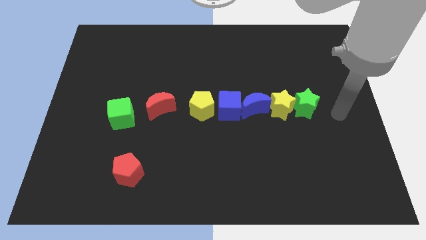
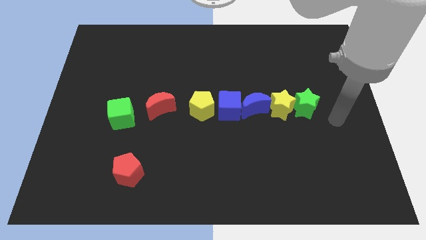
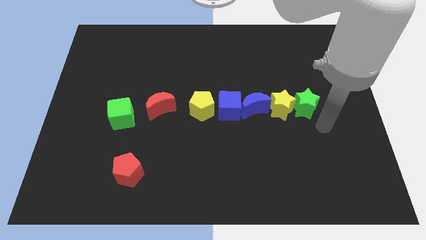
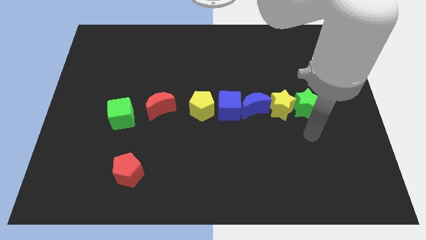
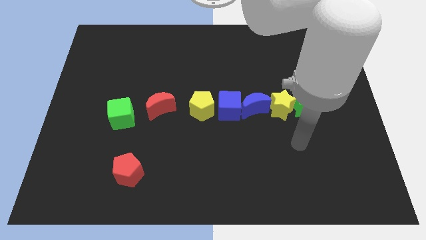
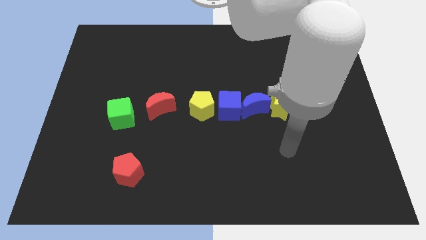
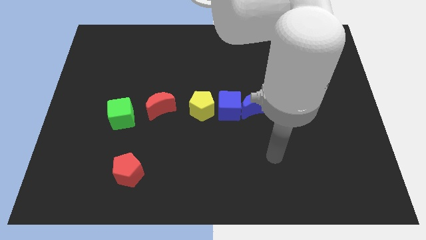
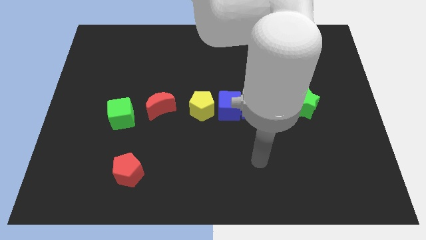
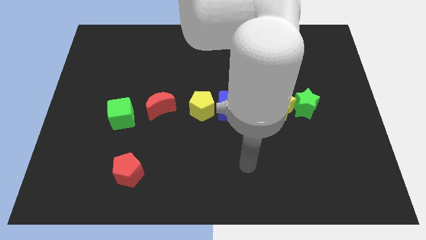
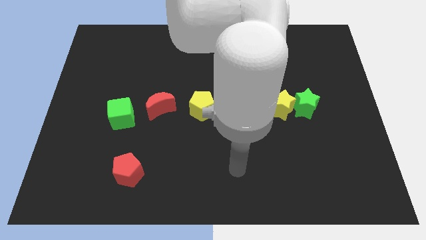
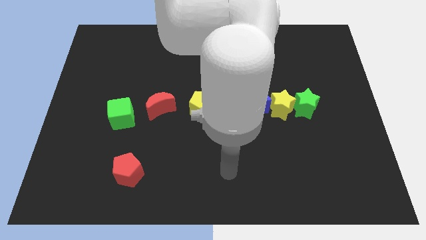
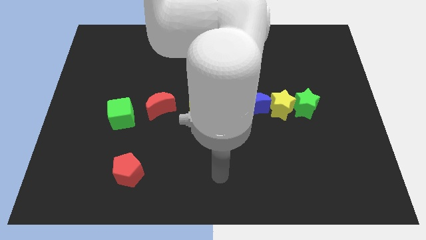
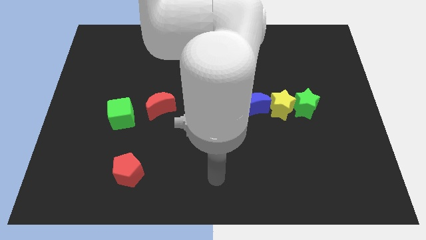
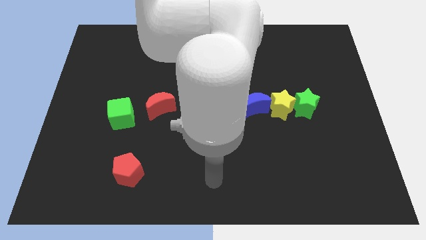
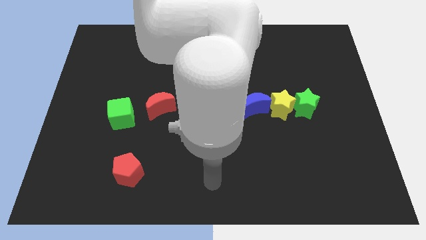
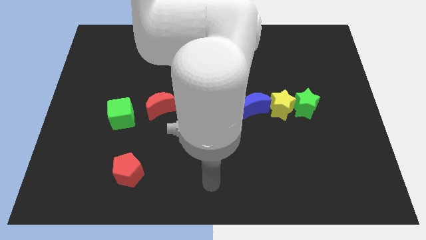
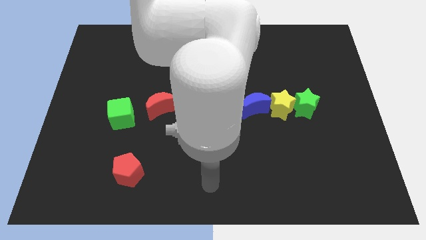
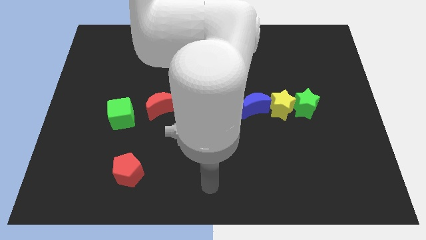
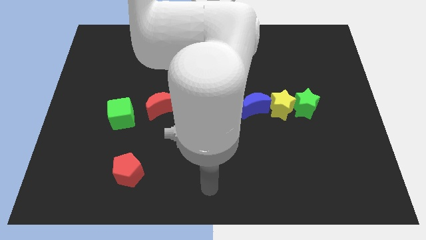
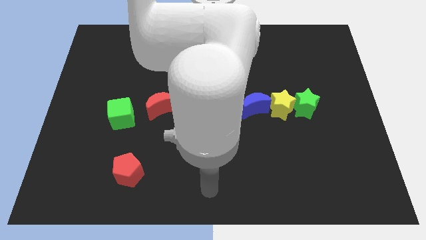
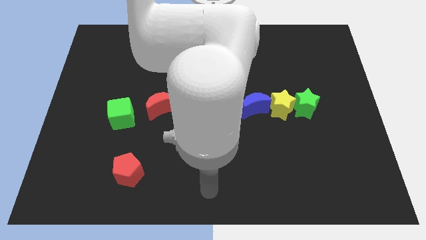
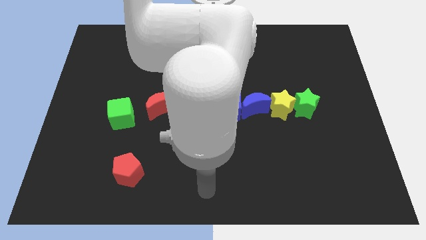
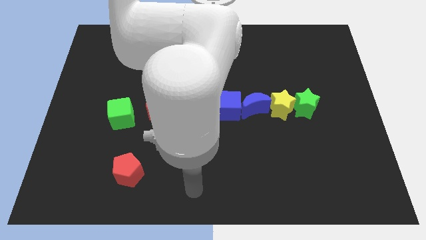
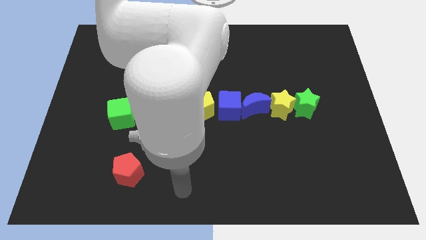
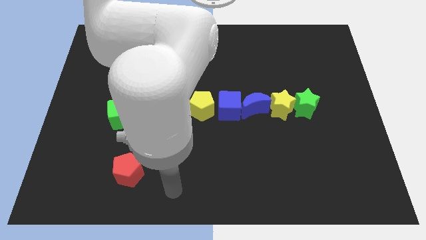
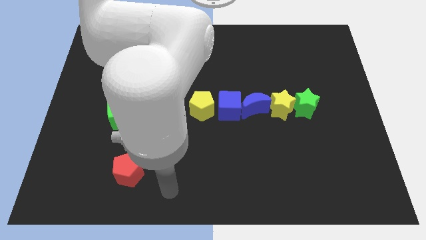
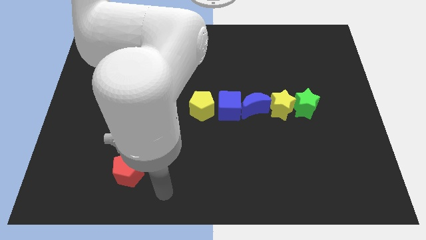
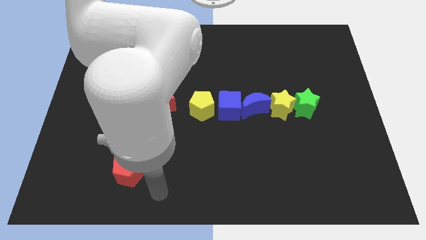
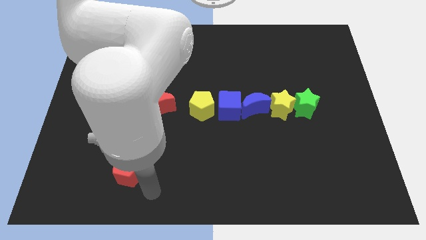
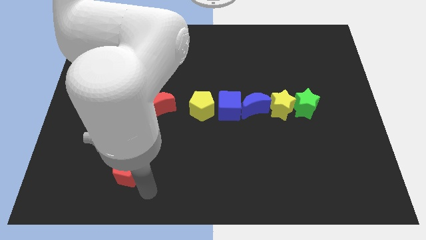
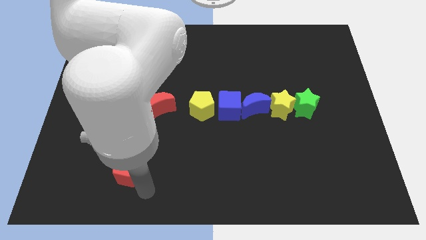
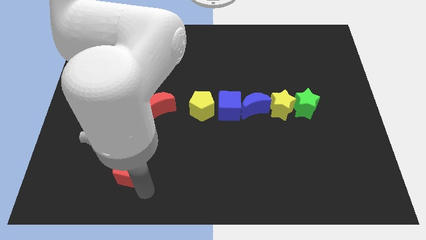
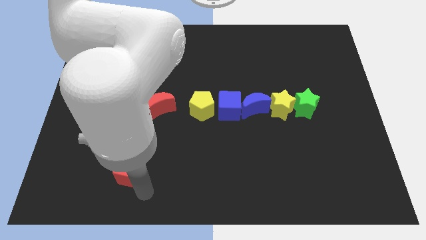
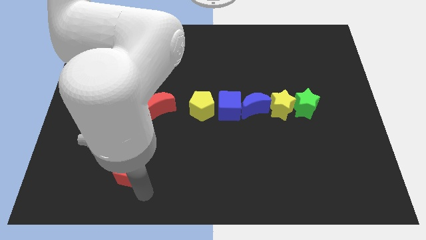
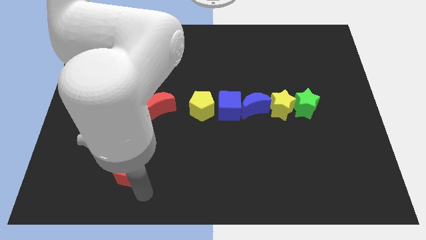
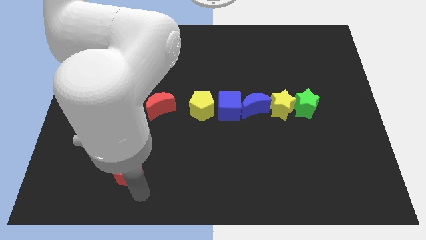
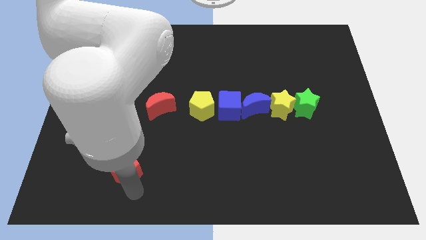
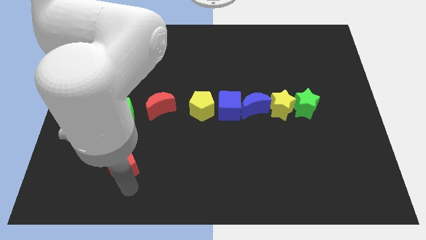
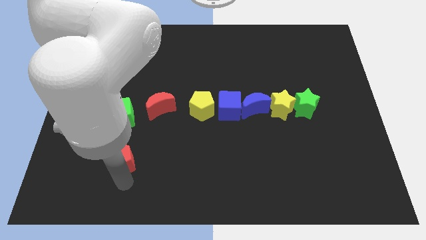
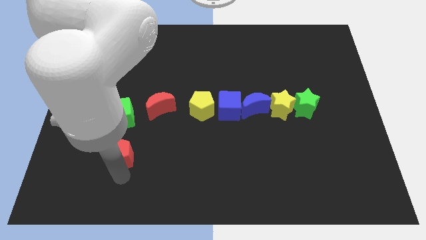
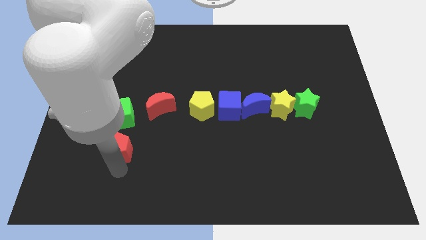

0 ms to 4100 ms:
push the red pentagon slightly to the top of the board

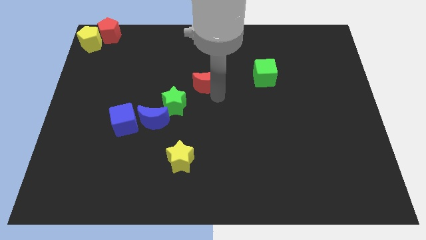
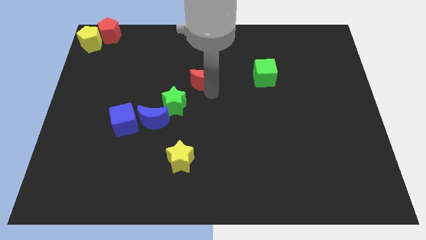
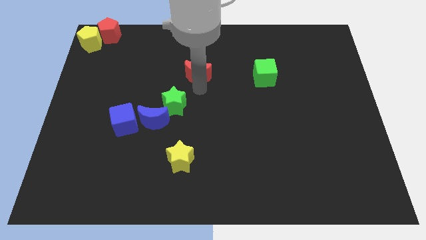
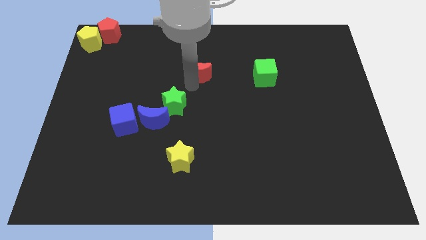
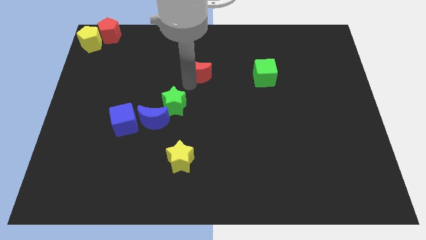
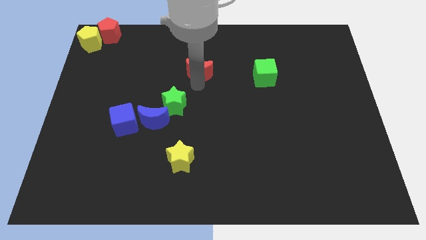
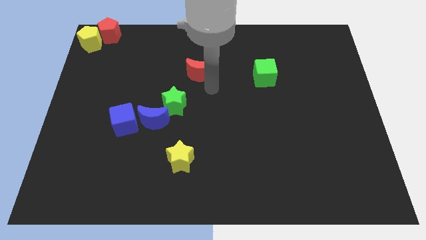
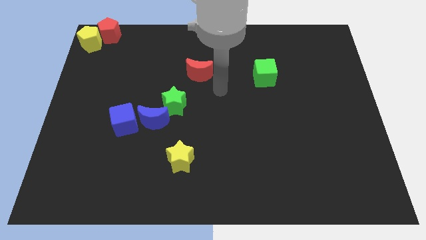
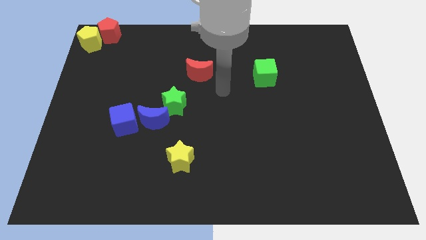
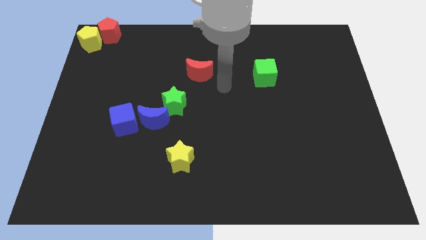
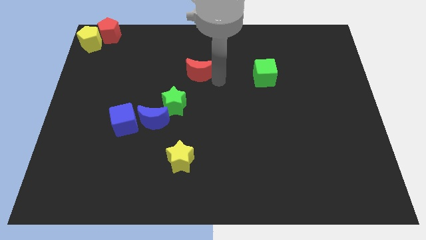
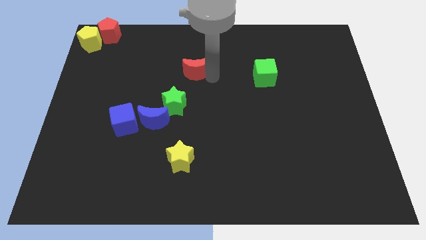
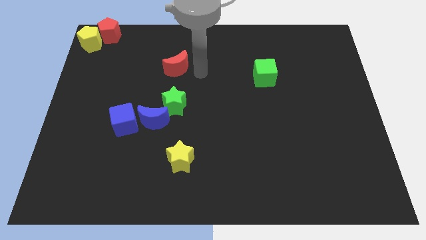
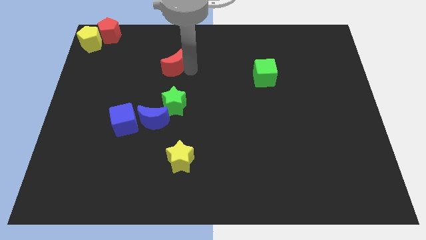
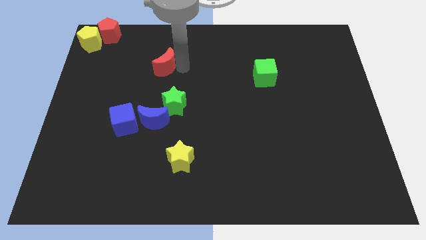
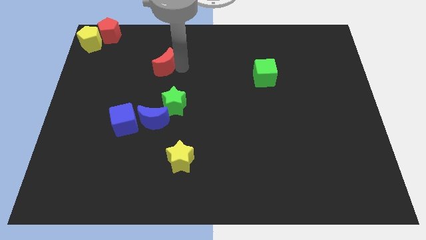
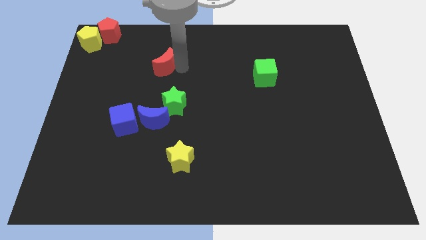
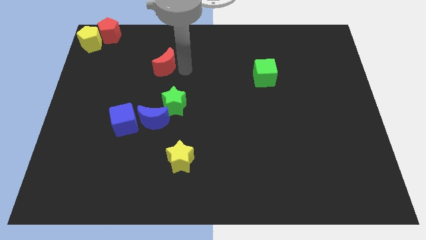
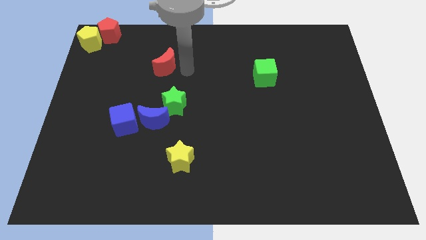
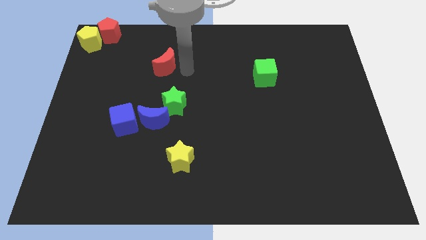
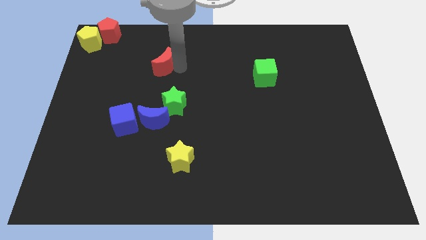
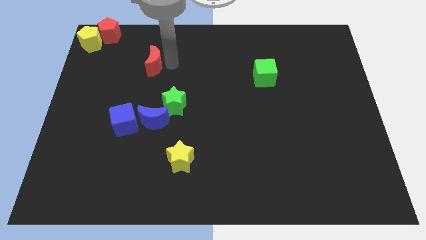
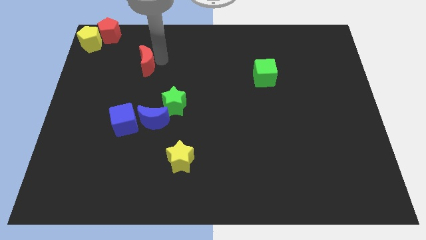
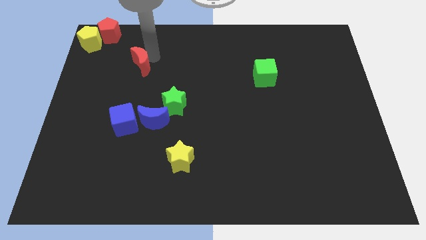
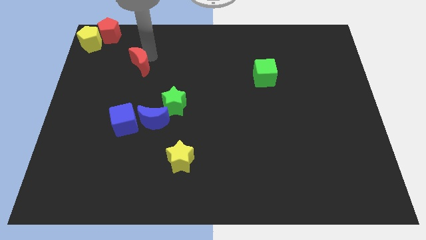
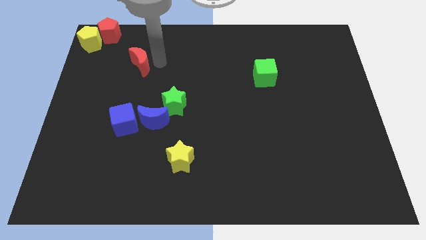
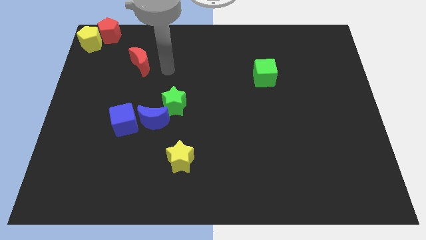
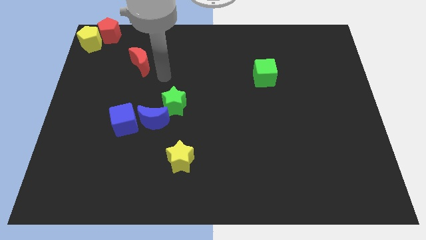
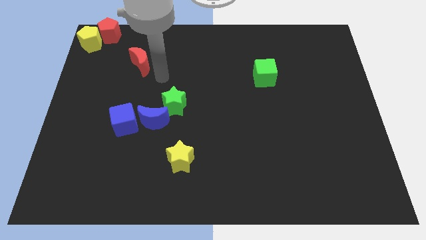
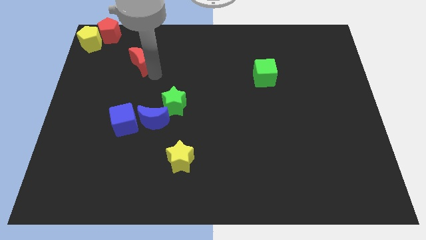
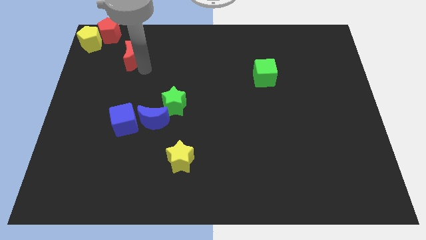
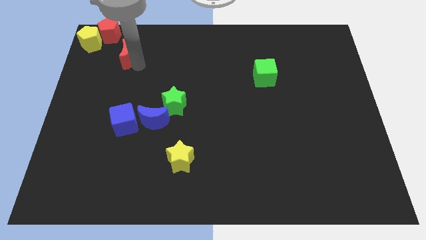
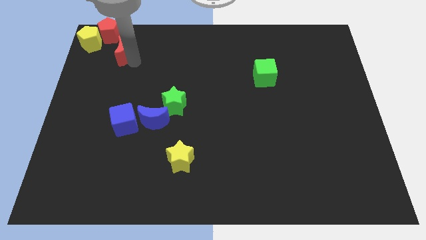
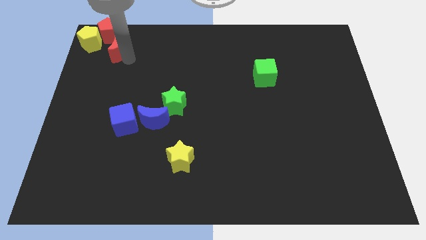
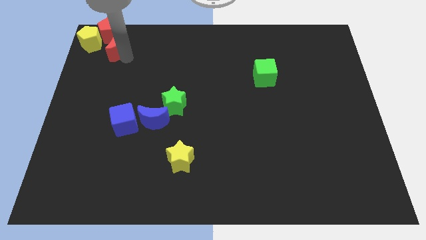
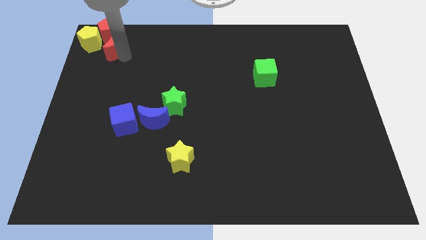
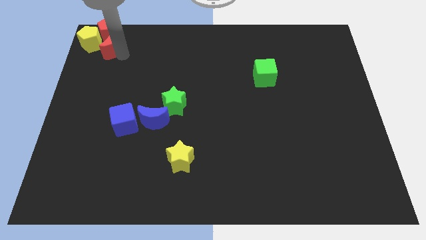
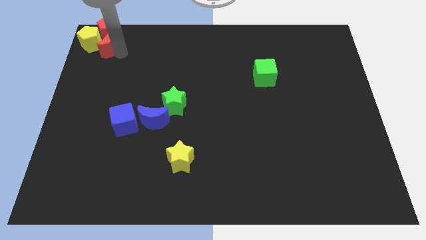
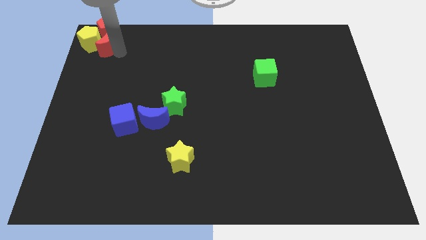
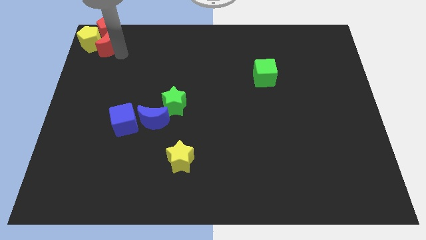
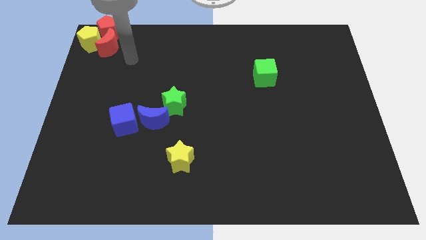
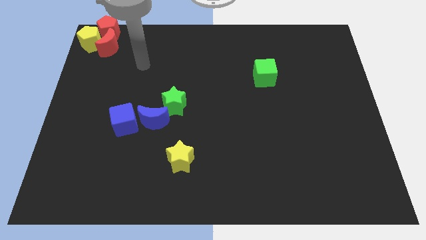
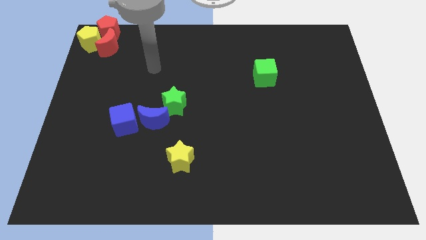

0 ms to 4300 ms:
push red moon to the top left corner of the board

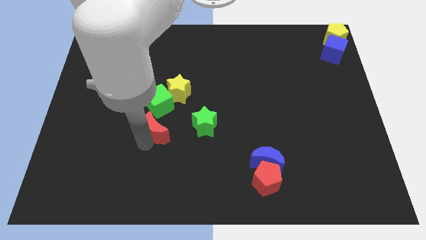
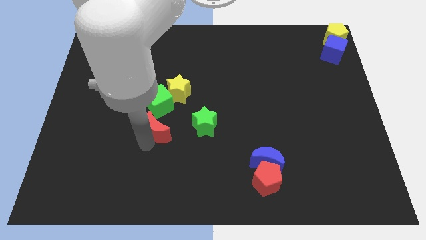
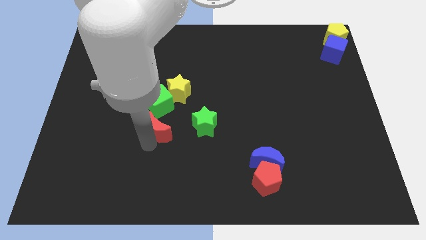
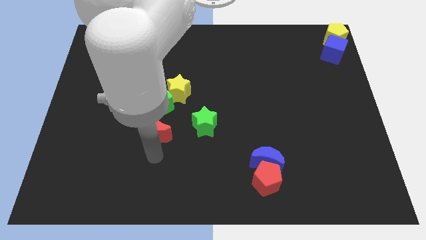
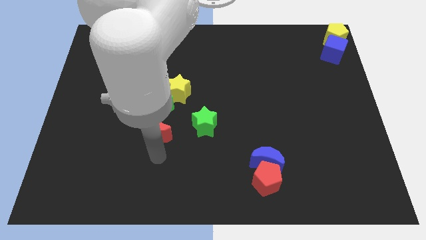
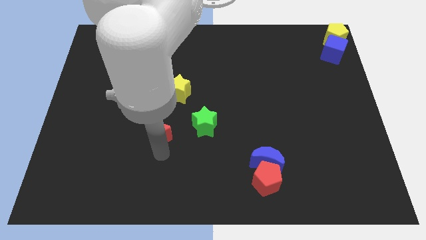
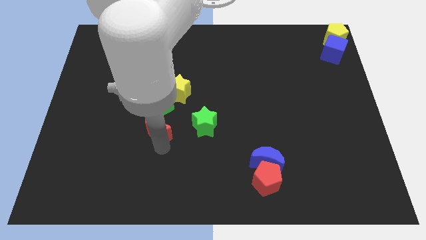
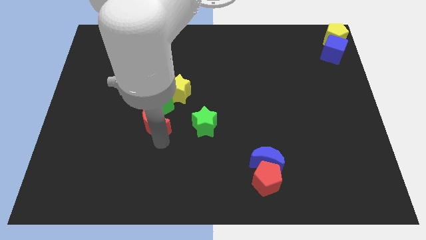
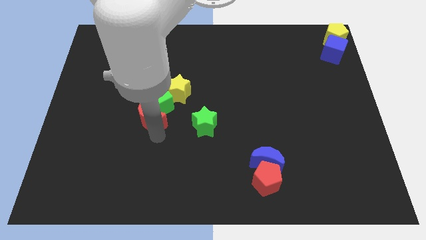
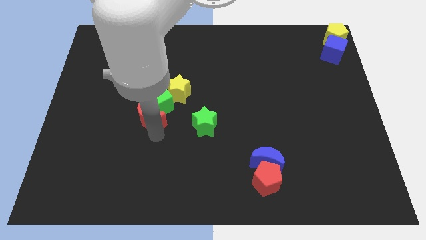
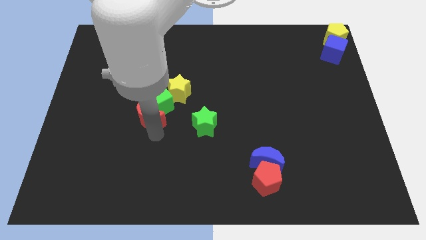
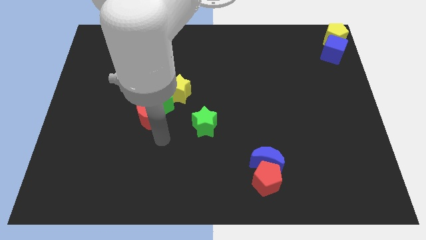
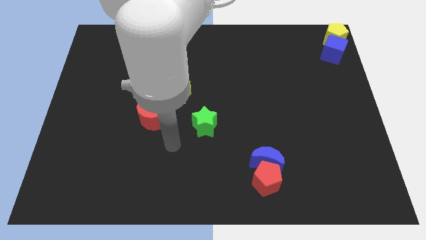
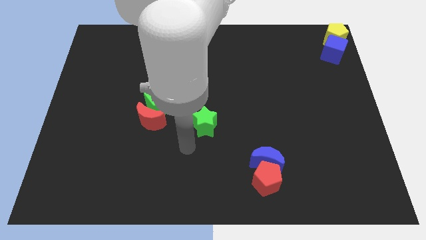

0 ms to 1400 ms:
push the red crescent towards the green cube on the left center of the board
